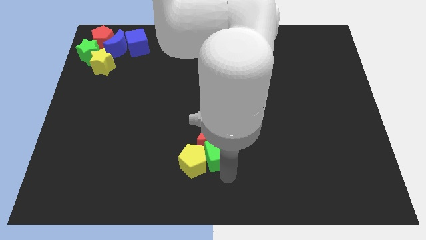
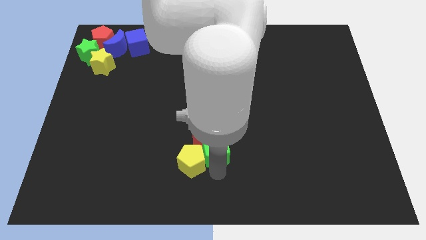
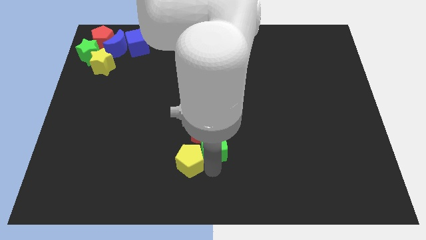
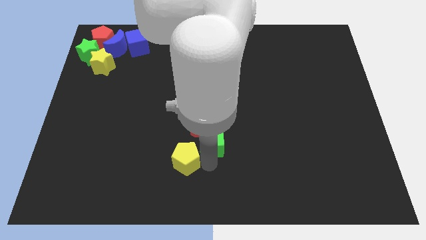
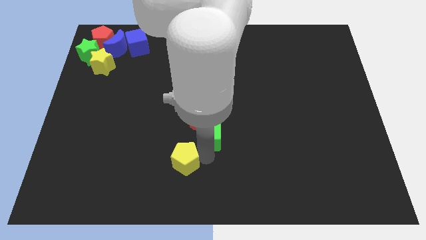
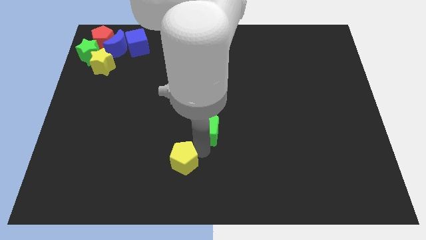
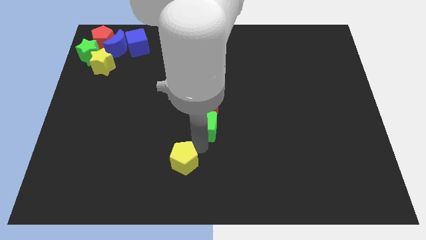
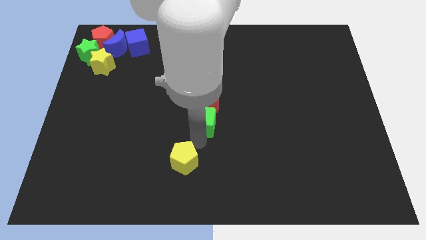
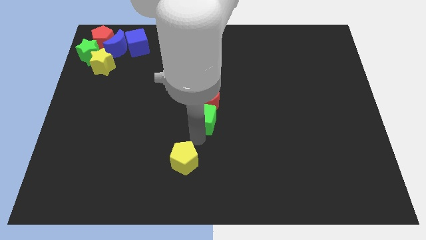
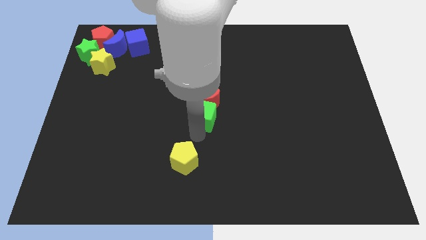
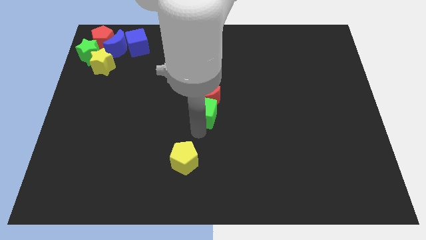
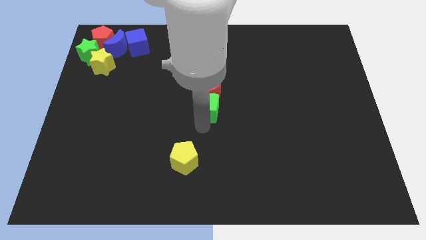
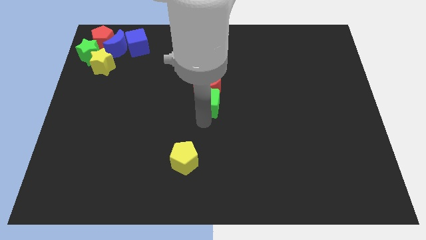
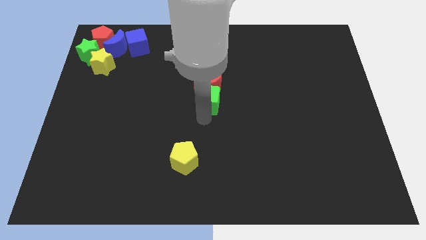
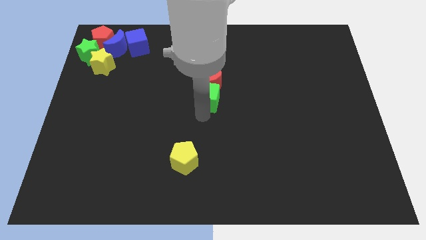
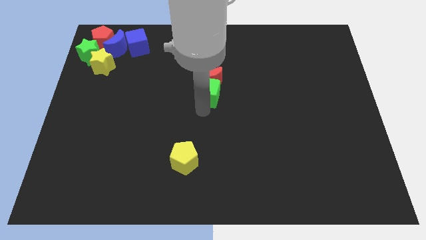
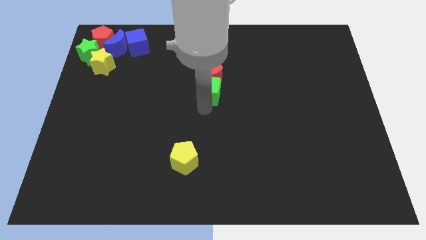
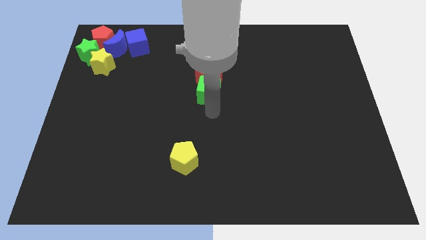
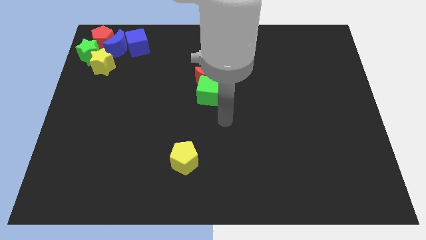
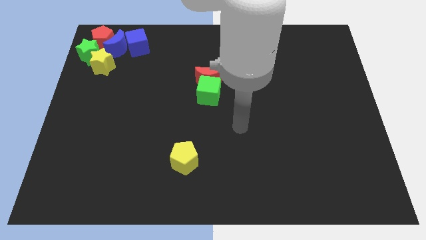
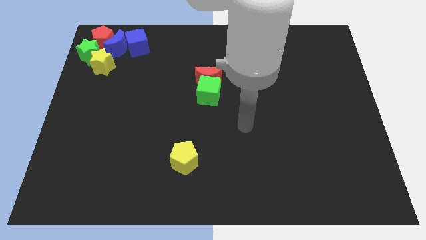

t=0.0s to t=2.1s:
place the green cube and red moon at the center of the board

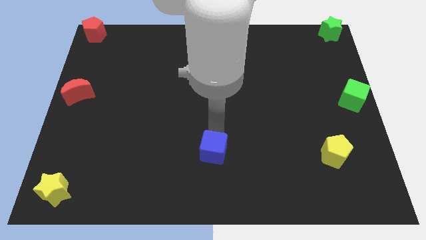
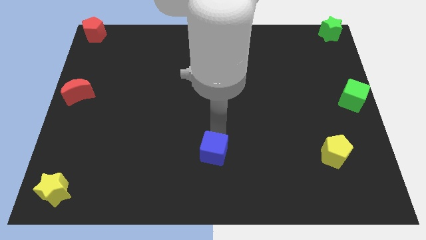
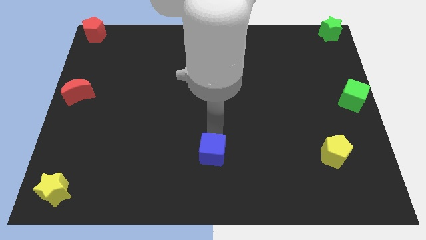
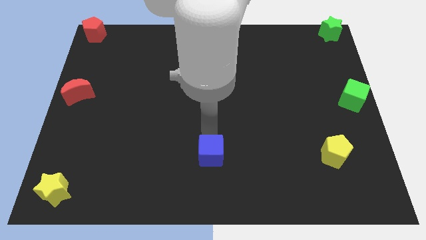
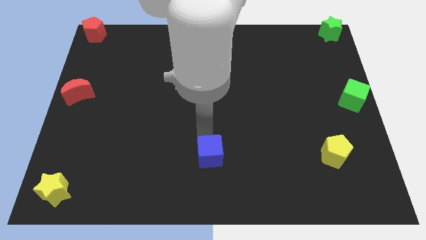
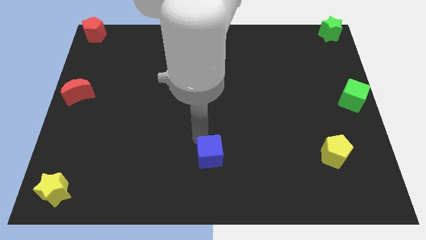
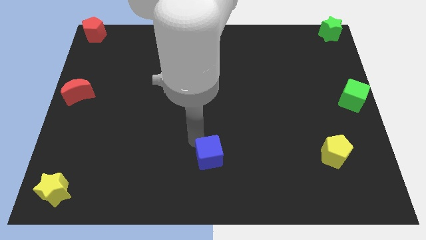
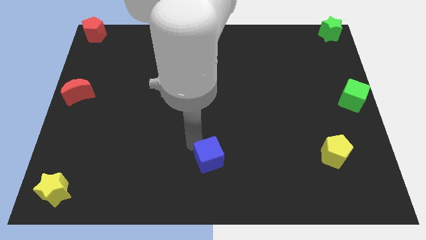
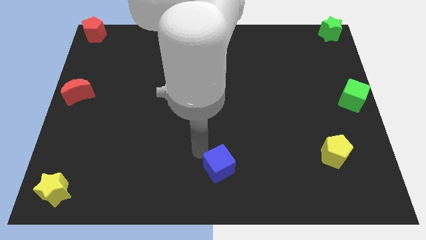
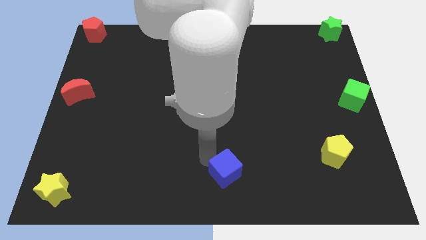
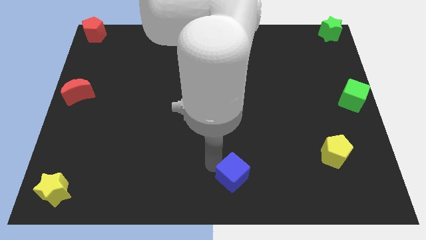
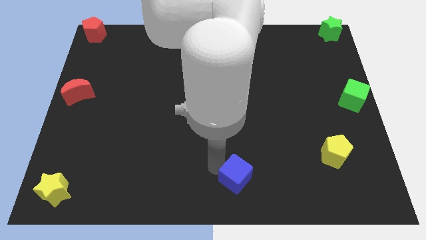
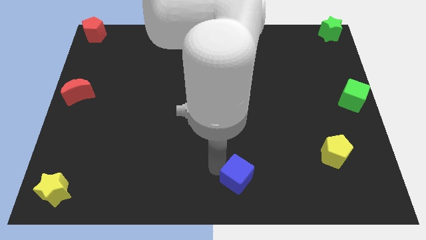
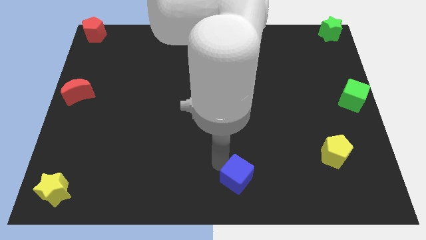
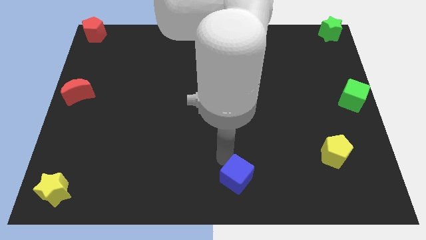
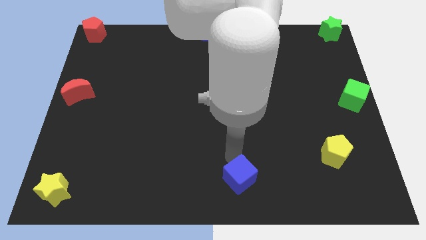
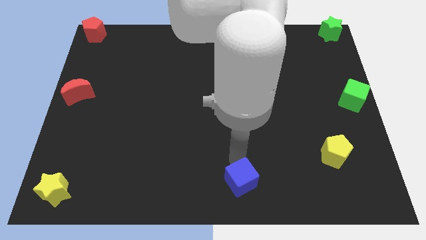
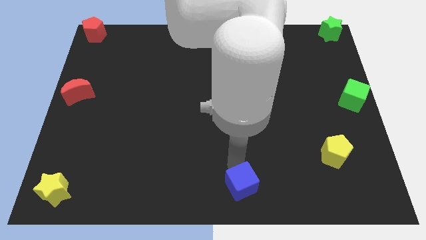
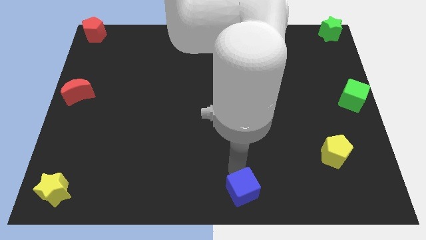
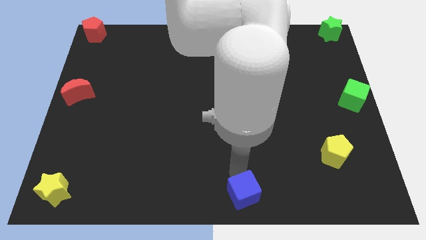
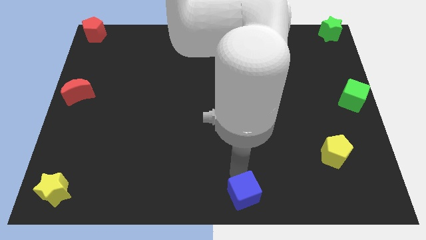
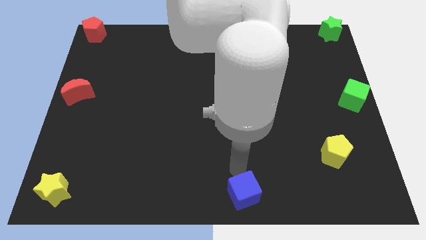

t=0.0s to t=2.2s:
push the blue cube to the bottom center of the board

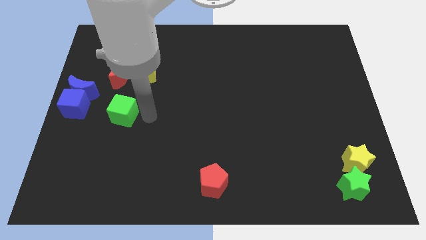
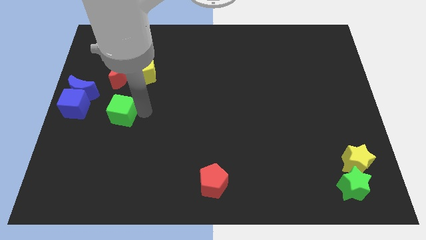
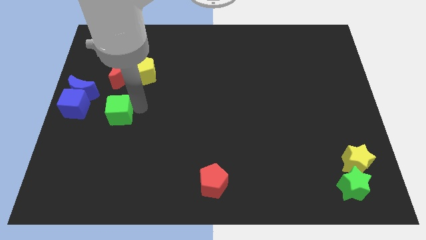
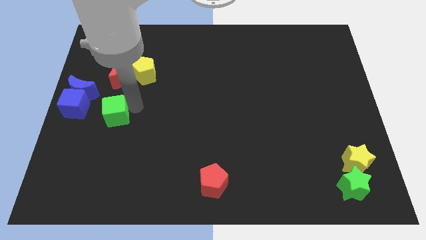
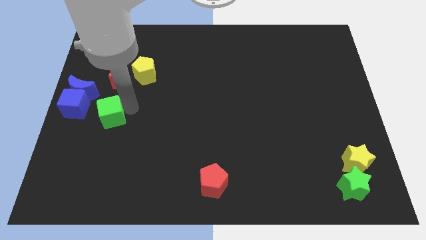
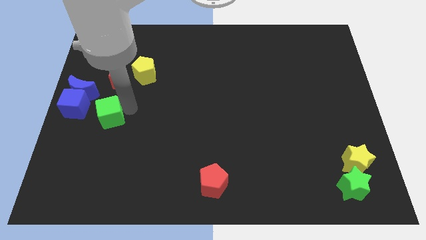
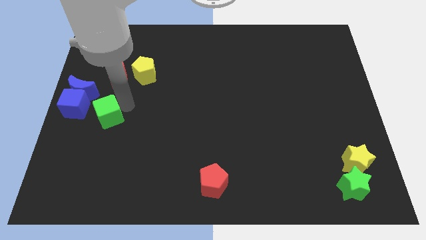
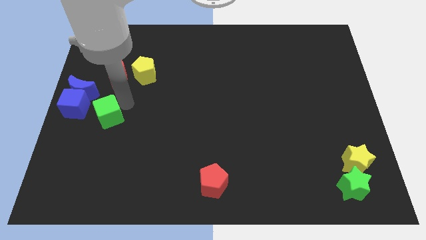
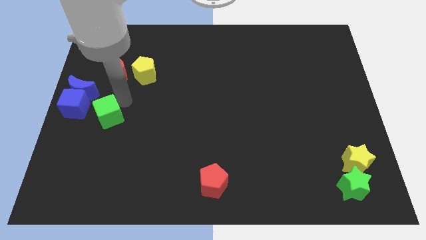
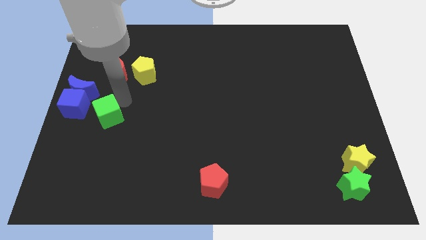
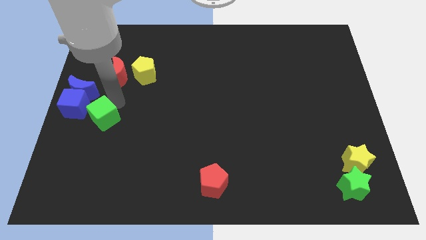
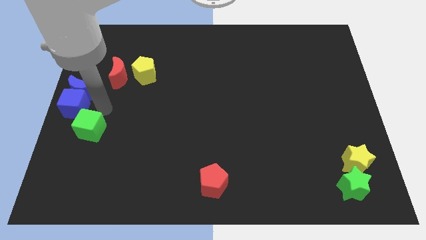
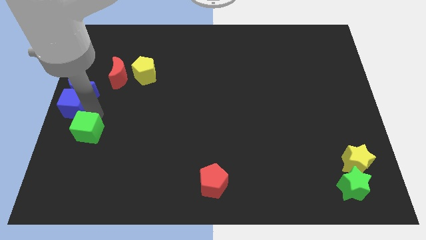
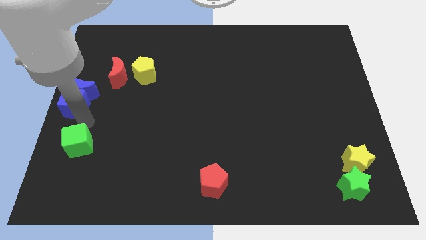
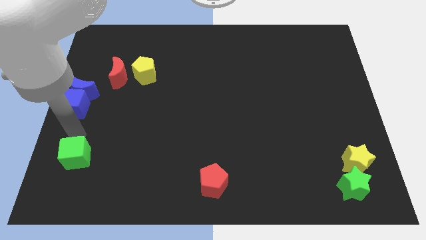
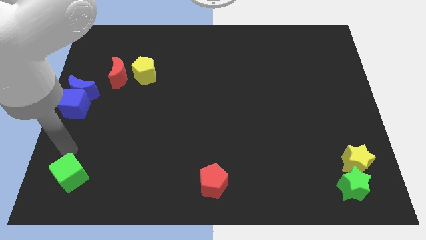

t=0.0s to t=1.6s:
slide the green cube towards the bottom left of the board

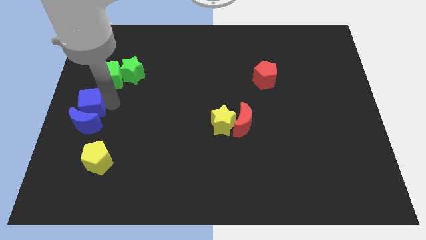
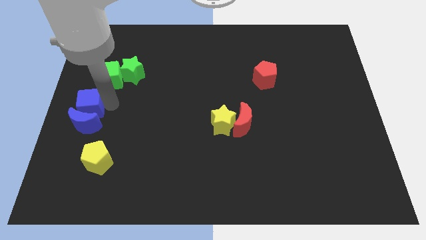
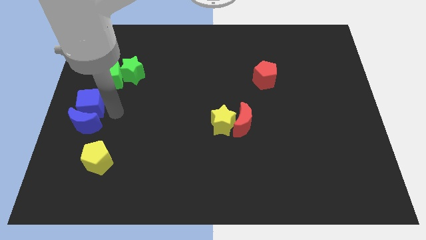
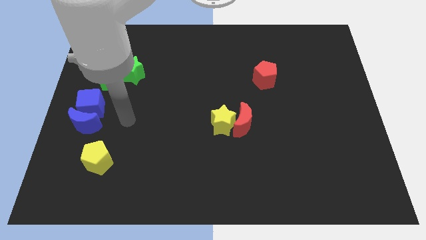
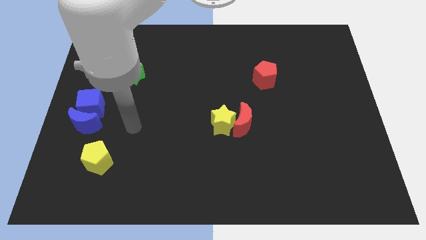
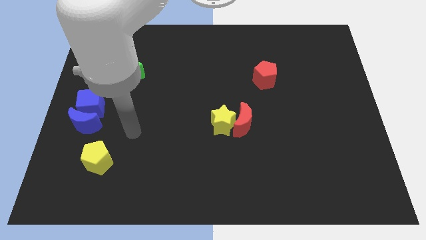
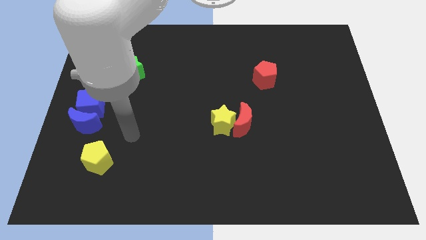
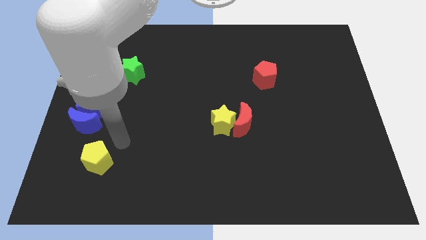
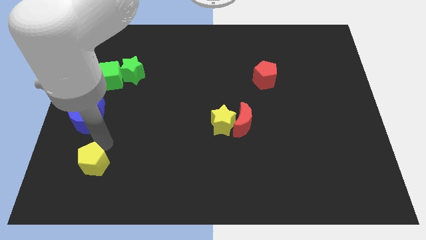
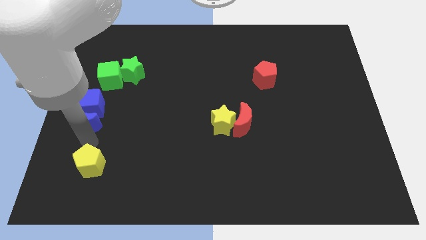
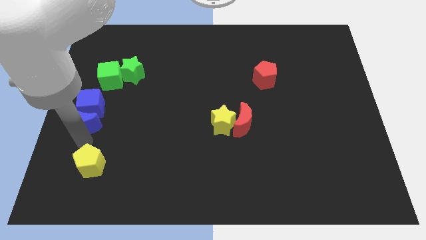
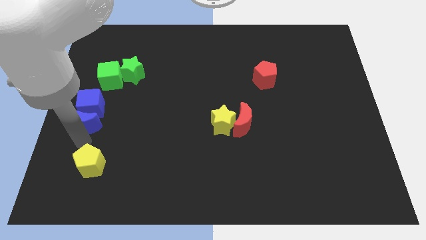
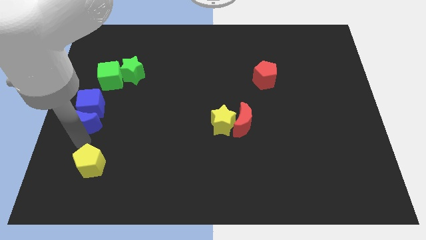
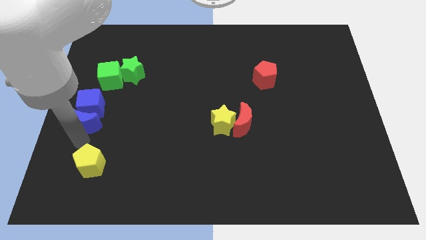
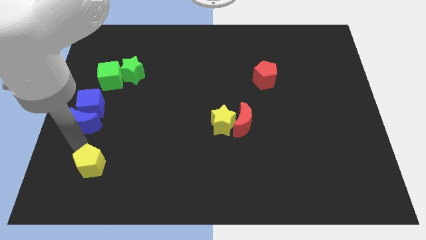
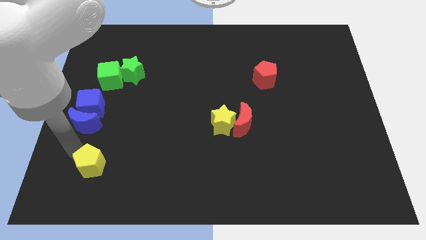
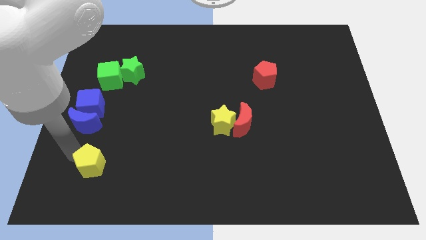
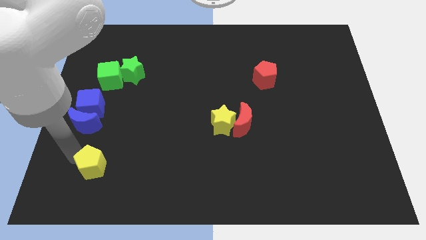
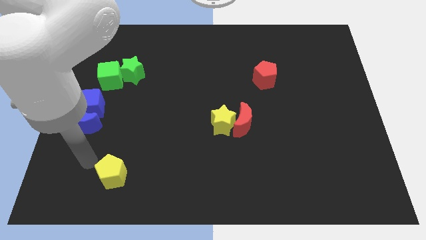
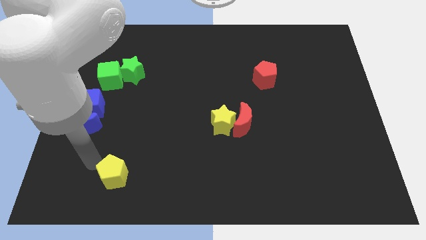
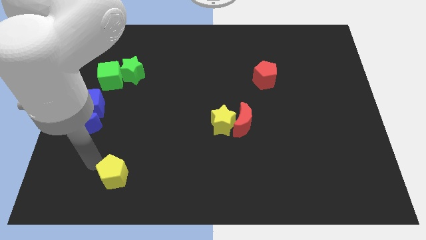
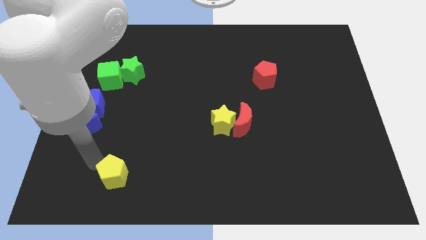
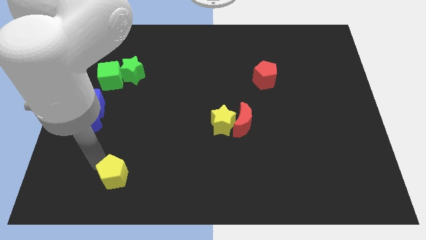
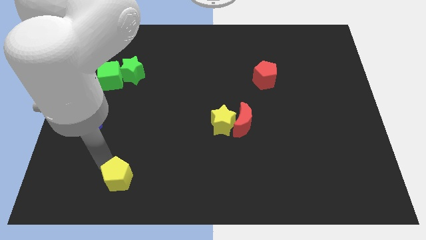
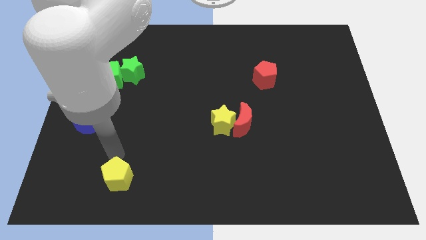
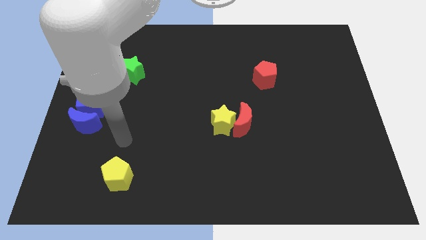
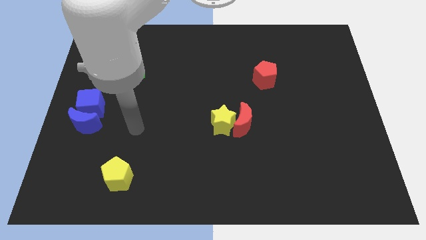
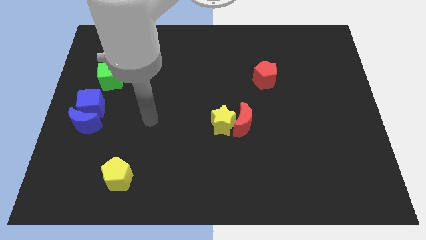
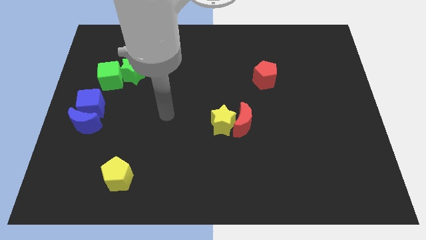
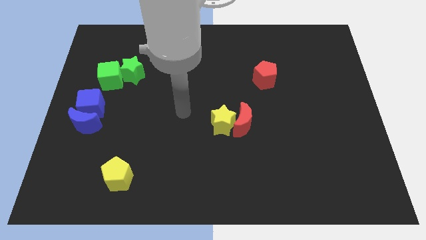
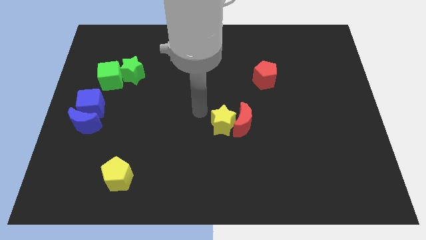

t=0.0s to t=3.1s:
push the yellow pentagon to the bottom right of the blue crescent
